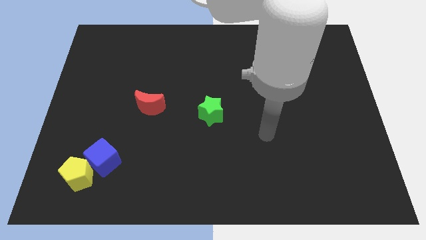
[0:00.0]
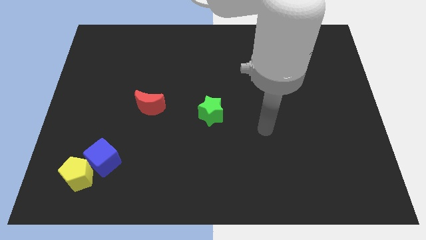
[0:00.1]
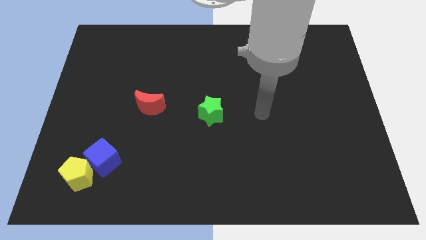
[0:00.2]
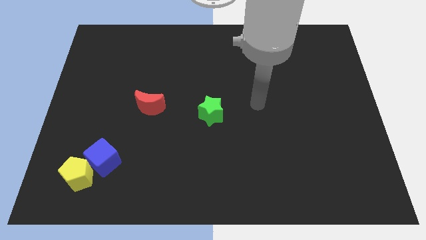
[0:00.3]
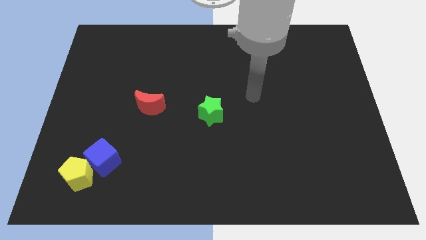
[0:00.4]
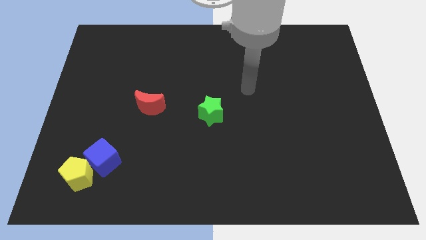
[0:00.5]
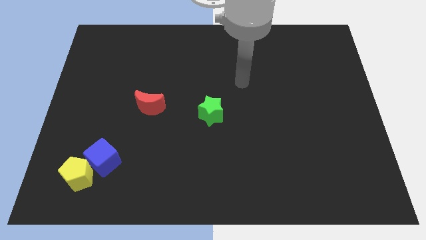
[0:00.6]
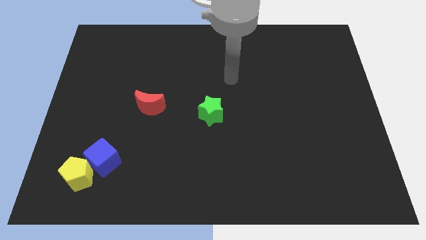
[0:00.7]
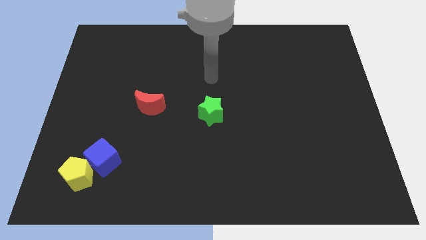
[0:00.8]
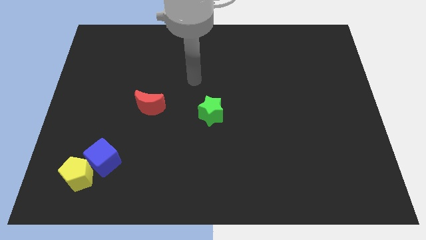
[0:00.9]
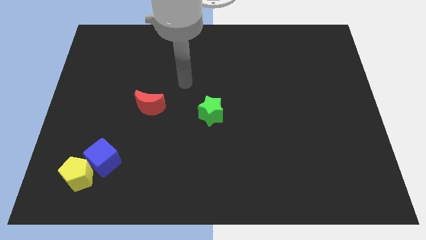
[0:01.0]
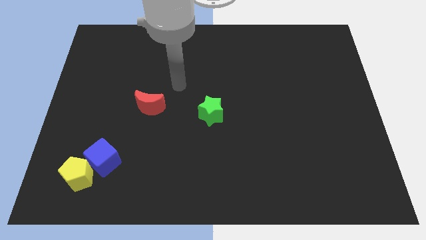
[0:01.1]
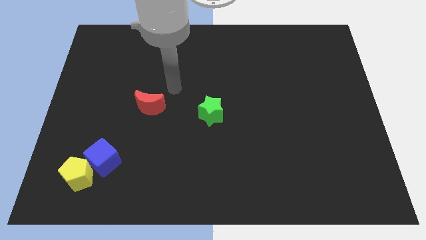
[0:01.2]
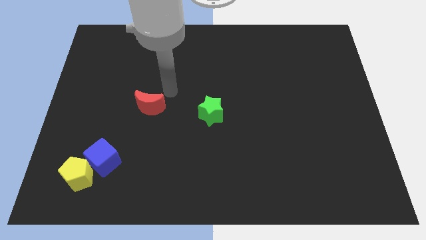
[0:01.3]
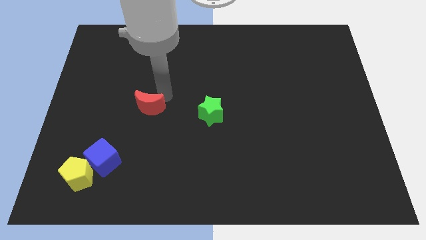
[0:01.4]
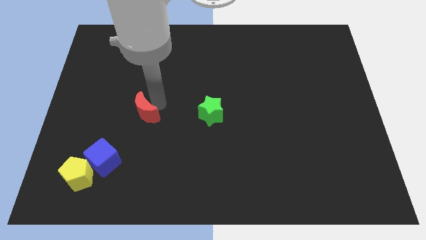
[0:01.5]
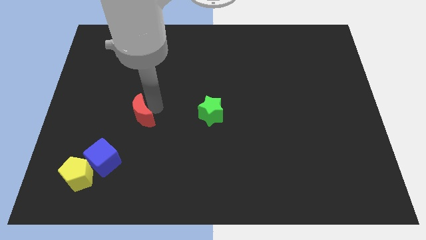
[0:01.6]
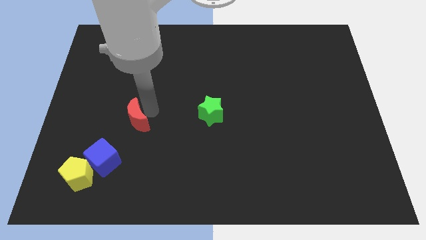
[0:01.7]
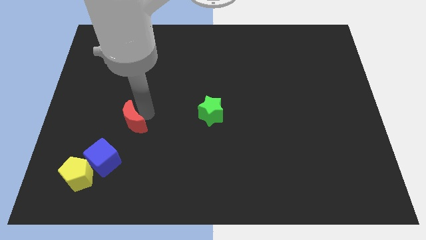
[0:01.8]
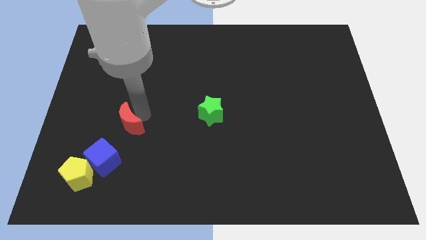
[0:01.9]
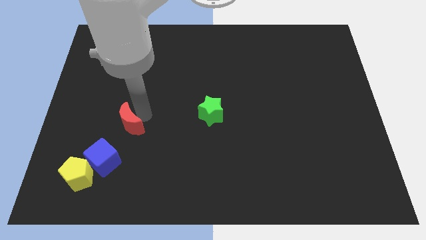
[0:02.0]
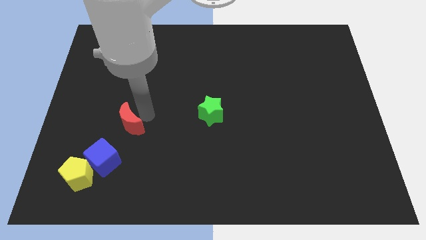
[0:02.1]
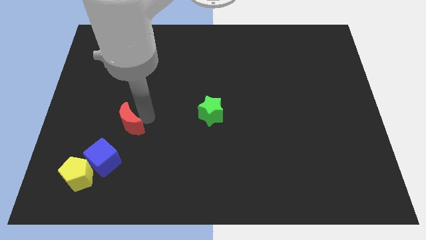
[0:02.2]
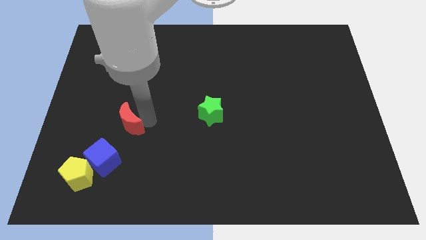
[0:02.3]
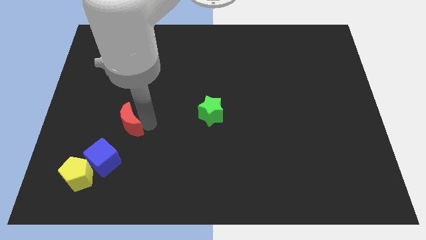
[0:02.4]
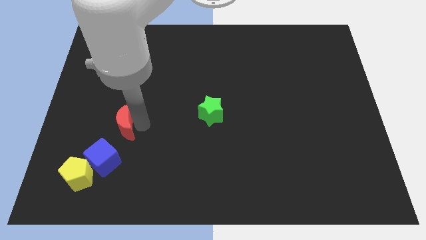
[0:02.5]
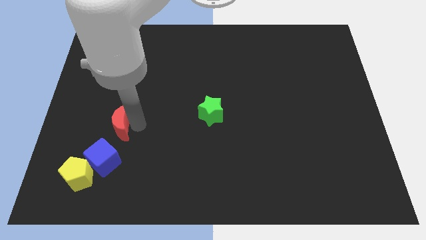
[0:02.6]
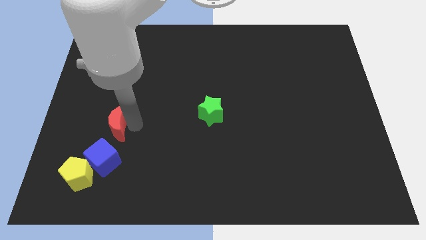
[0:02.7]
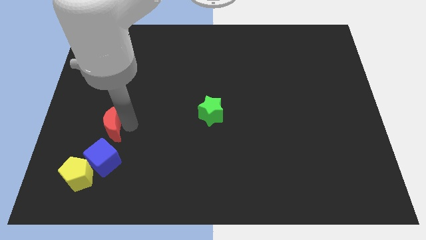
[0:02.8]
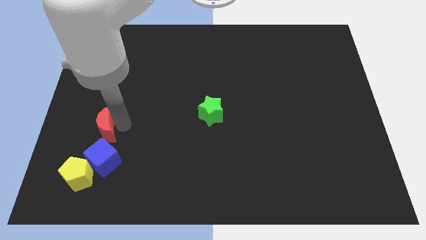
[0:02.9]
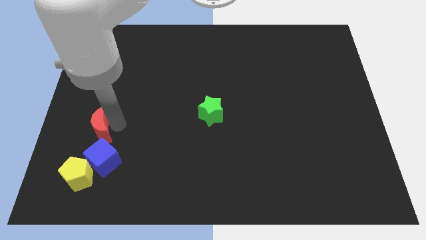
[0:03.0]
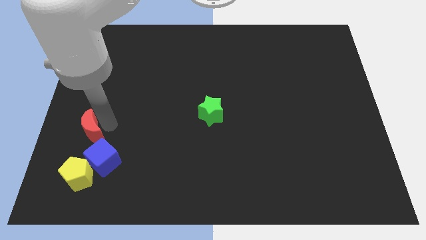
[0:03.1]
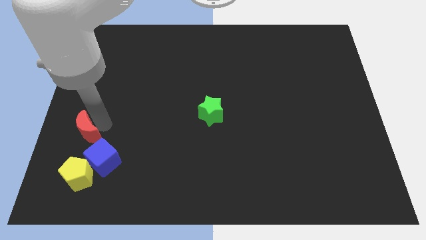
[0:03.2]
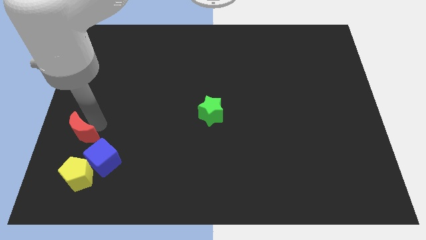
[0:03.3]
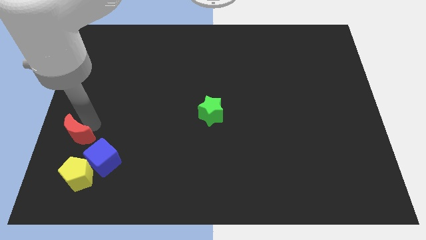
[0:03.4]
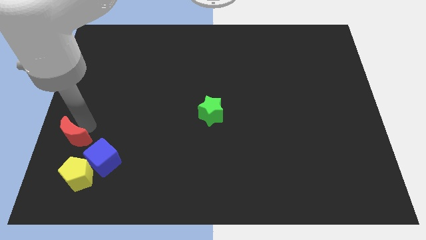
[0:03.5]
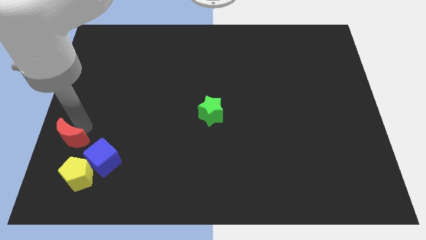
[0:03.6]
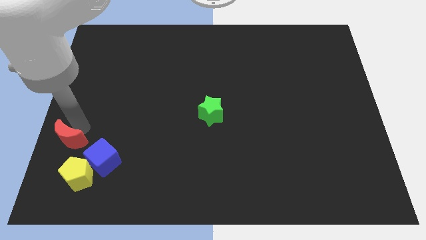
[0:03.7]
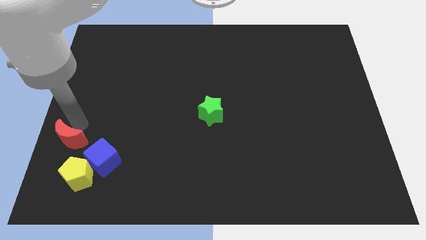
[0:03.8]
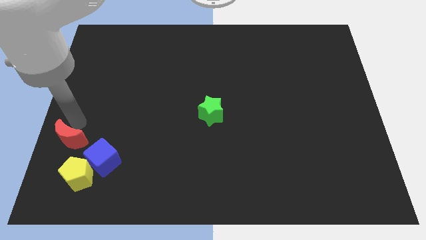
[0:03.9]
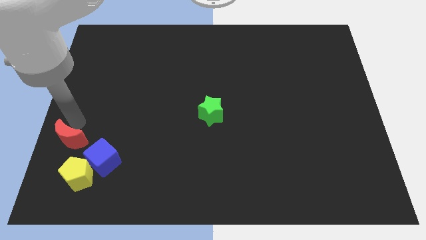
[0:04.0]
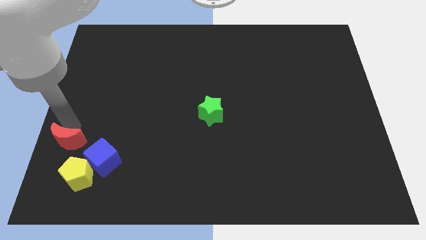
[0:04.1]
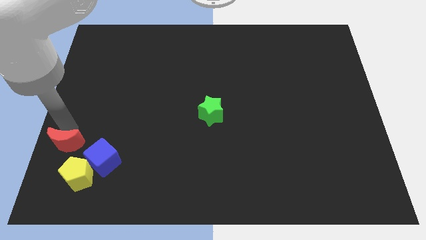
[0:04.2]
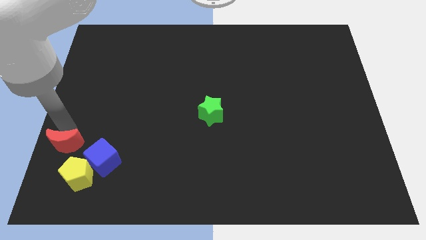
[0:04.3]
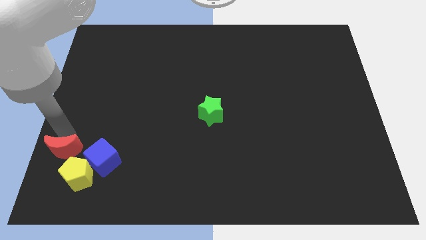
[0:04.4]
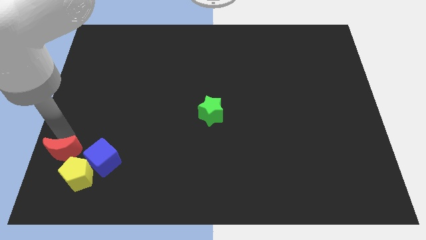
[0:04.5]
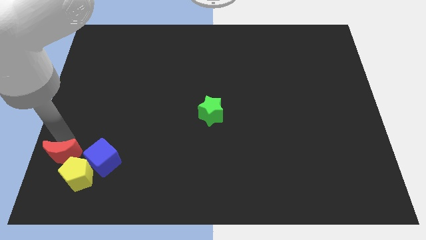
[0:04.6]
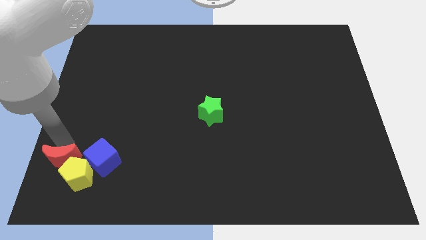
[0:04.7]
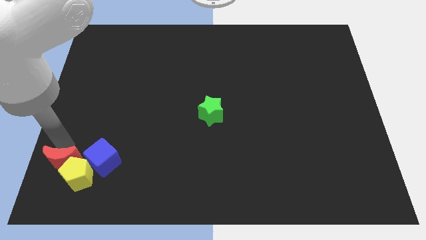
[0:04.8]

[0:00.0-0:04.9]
slide the red moon next to the yellow block

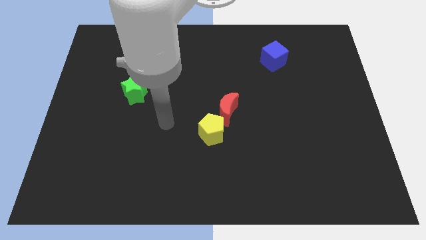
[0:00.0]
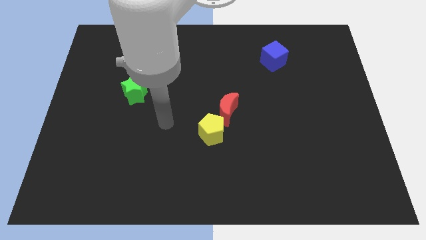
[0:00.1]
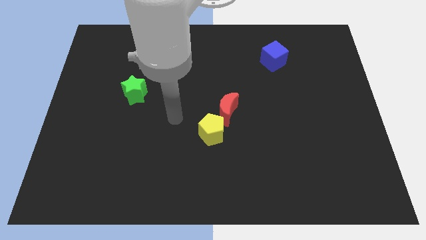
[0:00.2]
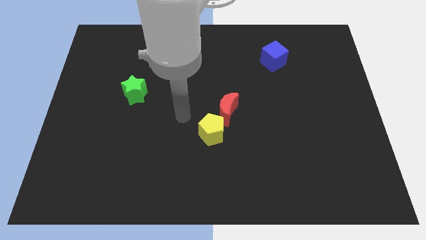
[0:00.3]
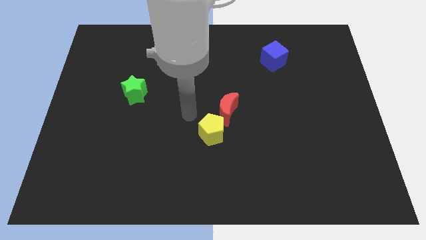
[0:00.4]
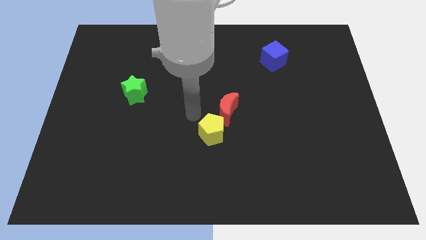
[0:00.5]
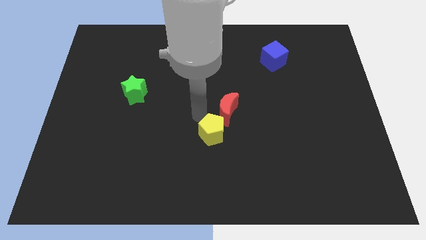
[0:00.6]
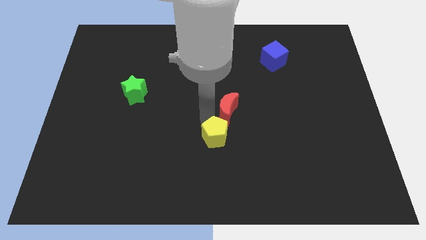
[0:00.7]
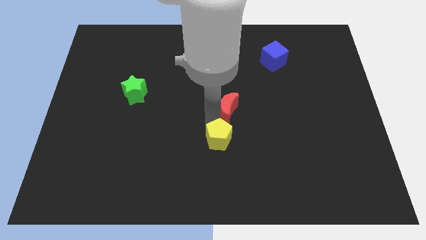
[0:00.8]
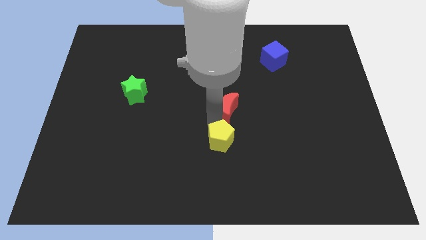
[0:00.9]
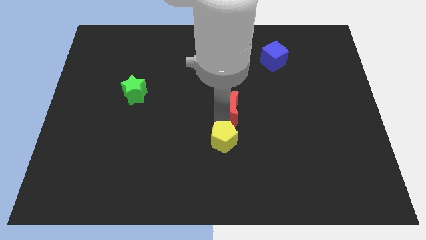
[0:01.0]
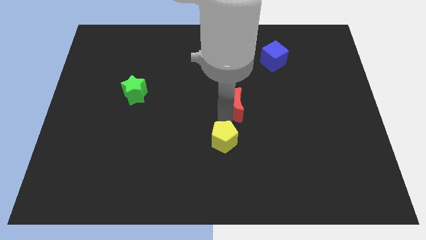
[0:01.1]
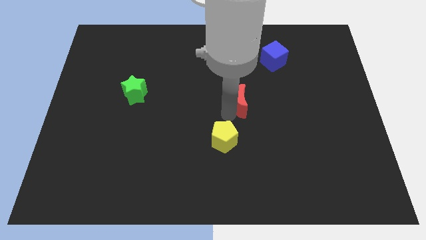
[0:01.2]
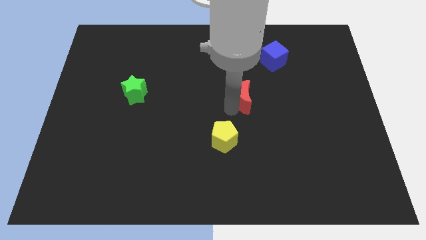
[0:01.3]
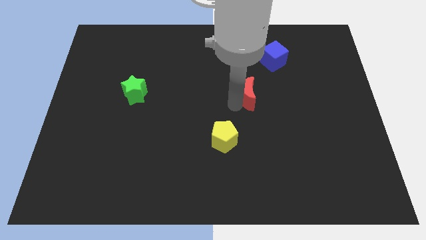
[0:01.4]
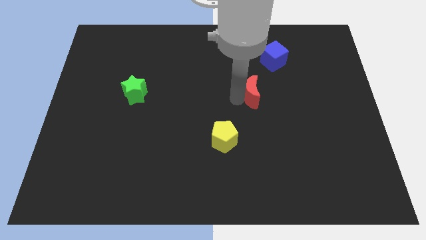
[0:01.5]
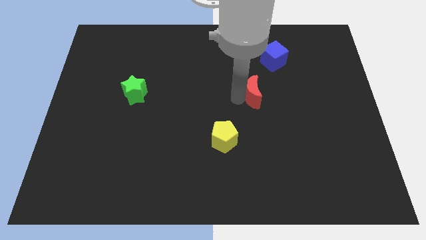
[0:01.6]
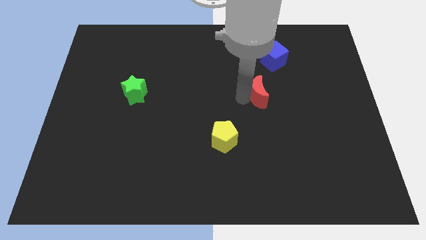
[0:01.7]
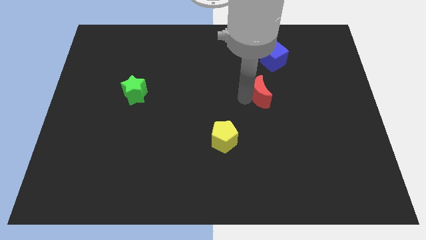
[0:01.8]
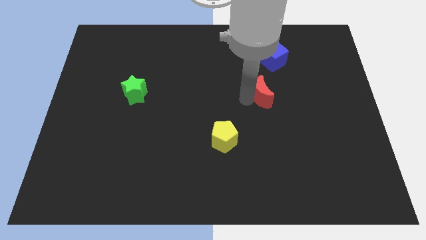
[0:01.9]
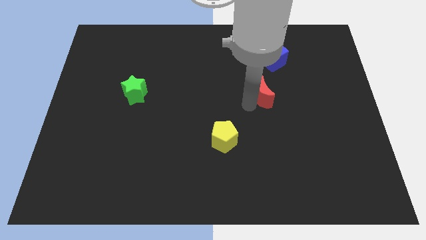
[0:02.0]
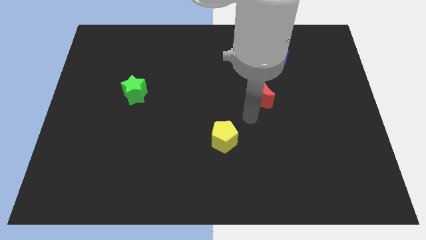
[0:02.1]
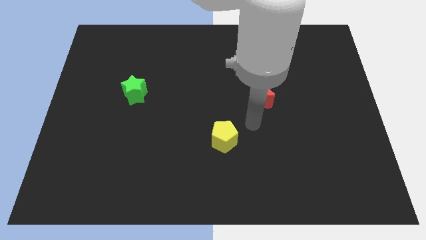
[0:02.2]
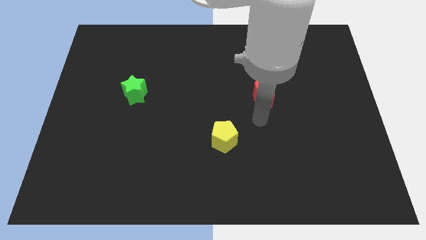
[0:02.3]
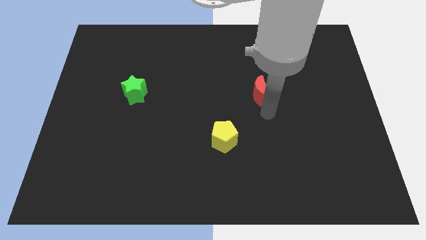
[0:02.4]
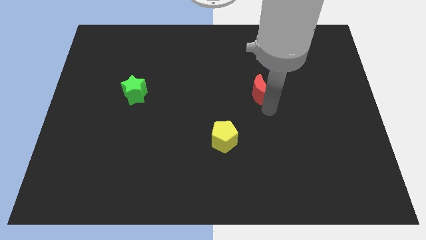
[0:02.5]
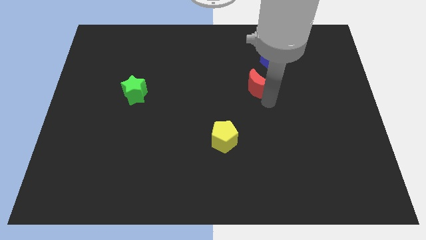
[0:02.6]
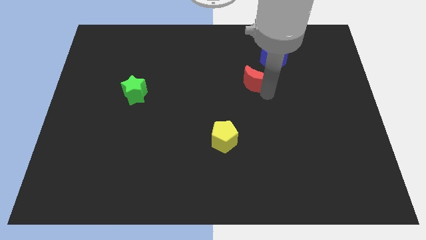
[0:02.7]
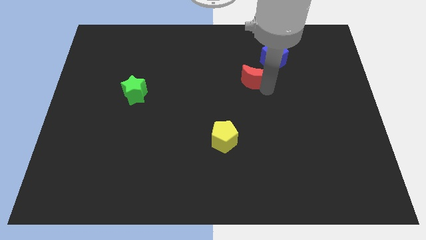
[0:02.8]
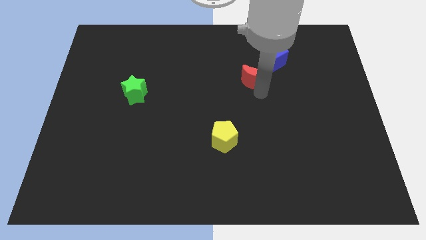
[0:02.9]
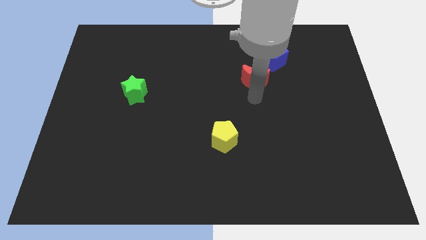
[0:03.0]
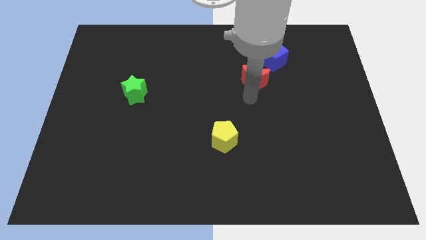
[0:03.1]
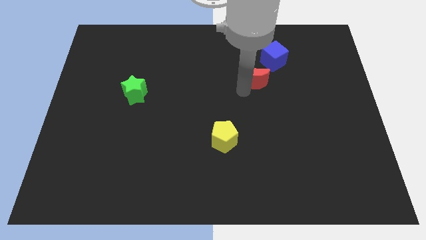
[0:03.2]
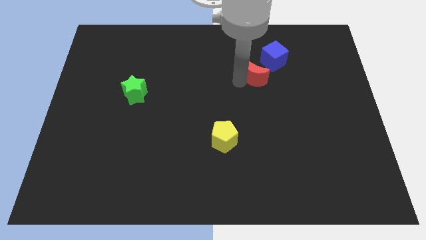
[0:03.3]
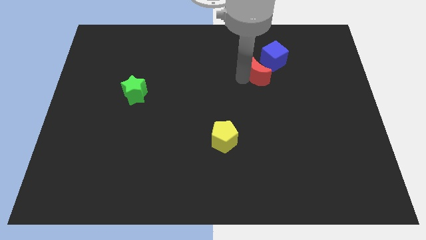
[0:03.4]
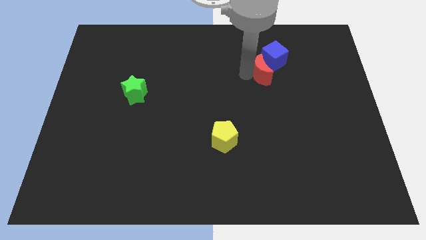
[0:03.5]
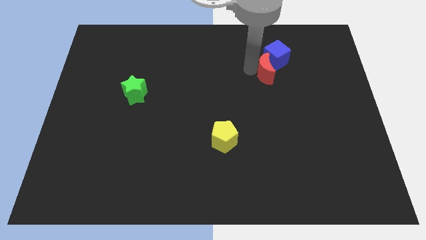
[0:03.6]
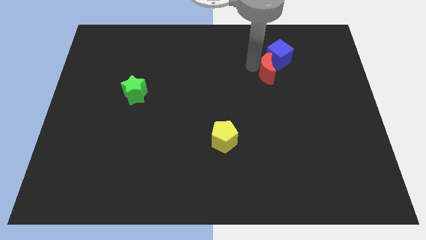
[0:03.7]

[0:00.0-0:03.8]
move the red moon close to the blue block
